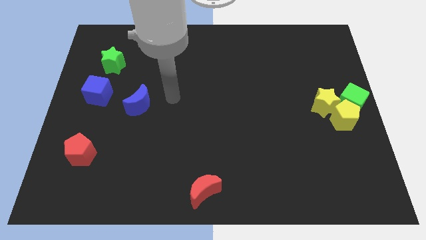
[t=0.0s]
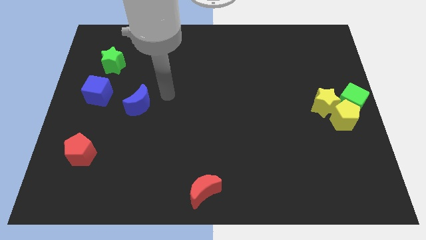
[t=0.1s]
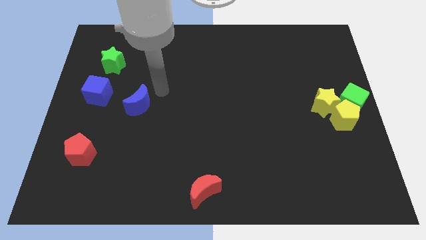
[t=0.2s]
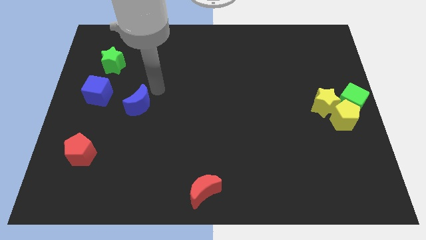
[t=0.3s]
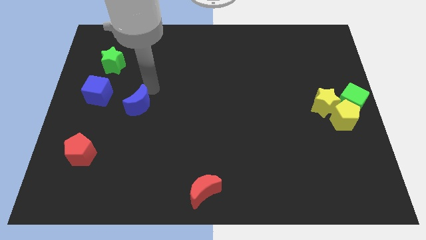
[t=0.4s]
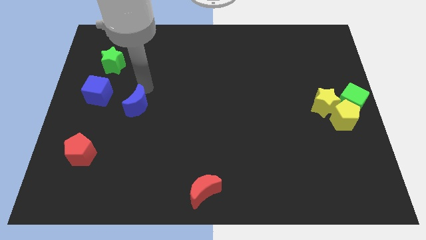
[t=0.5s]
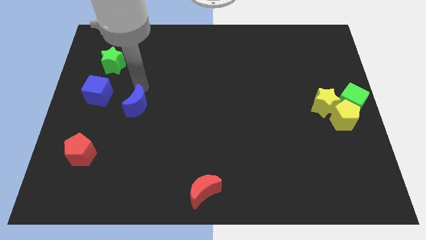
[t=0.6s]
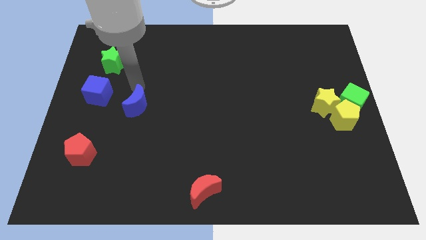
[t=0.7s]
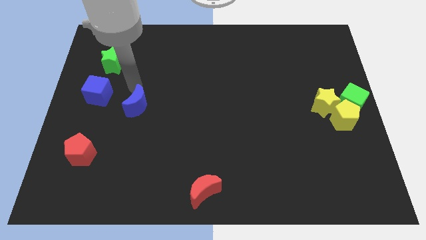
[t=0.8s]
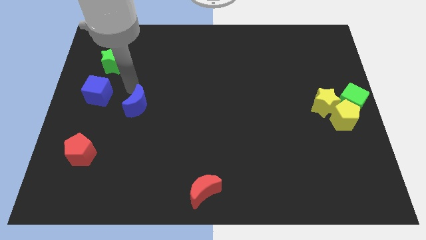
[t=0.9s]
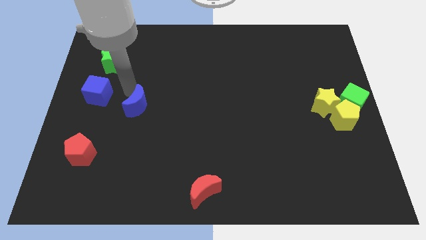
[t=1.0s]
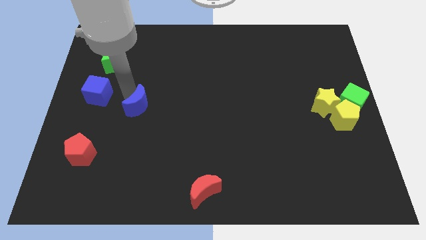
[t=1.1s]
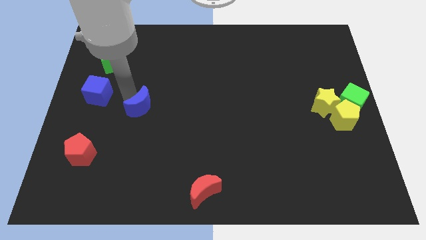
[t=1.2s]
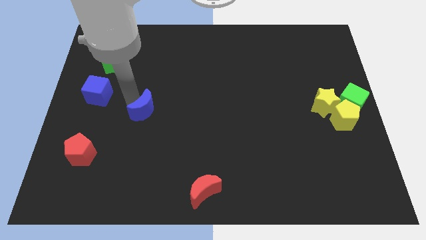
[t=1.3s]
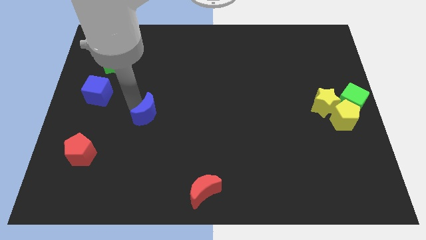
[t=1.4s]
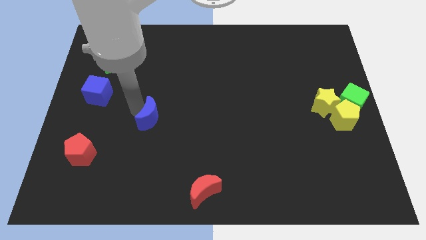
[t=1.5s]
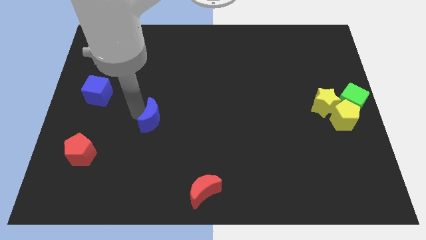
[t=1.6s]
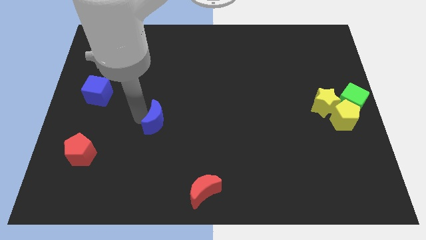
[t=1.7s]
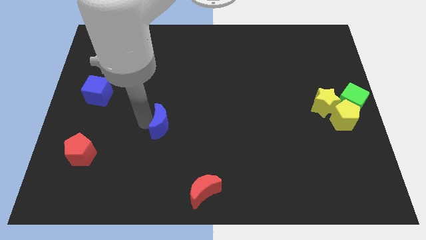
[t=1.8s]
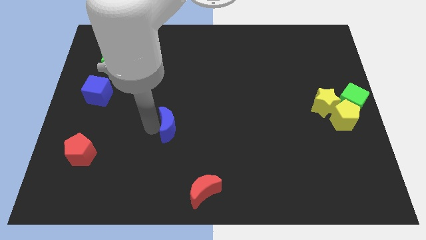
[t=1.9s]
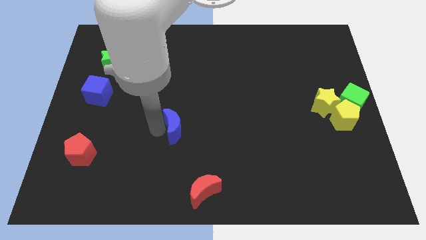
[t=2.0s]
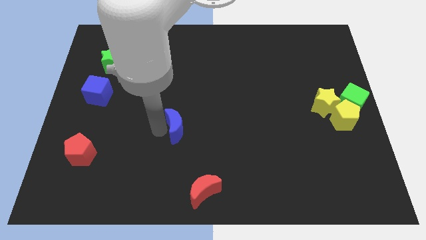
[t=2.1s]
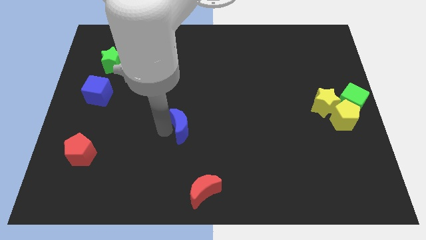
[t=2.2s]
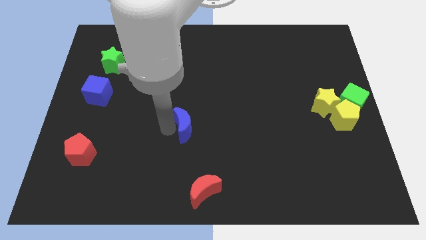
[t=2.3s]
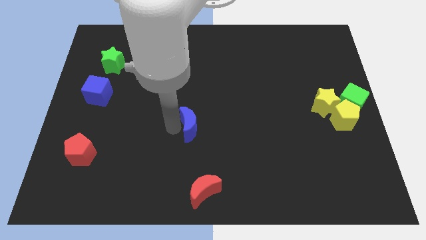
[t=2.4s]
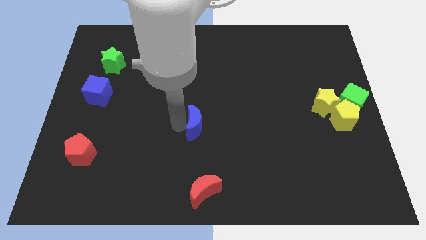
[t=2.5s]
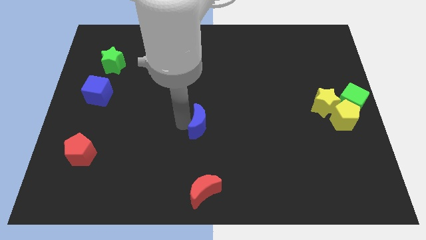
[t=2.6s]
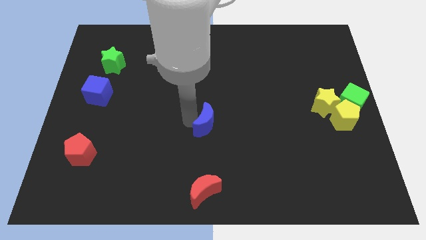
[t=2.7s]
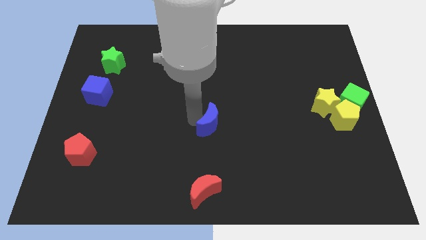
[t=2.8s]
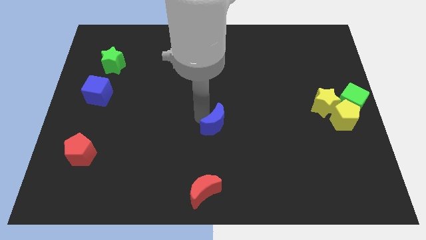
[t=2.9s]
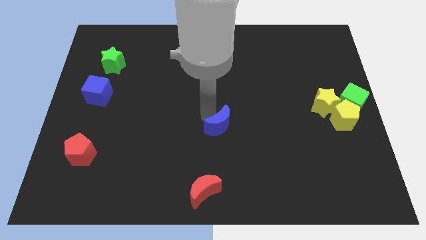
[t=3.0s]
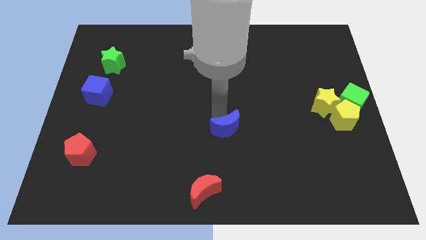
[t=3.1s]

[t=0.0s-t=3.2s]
place the blue moon above the red moon

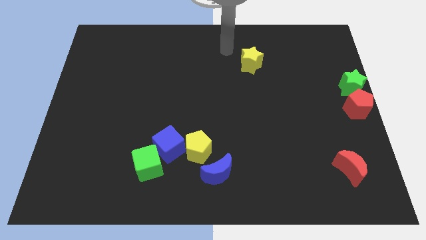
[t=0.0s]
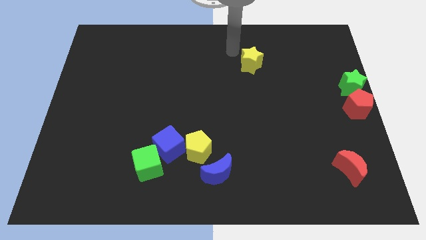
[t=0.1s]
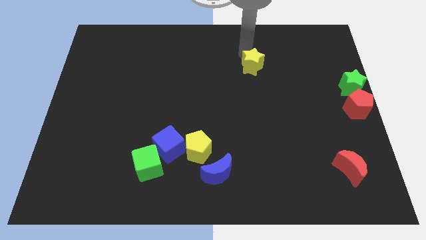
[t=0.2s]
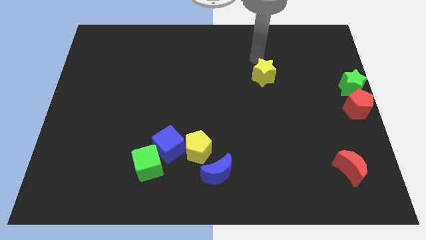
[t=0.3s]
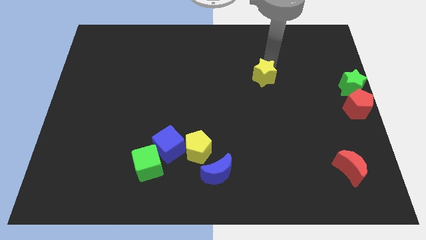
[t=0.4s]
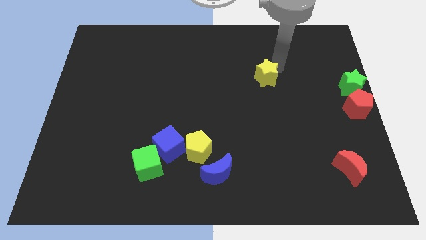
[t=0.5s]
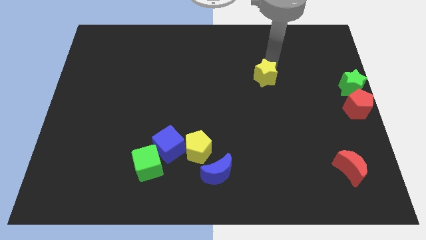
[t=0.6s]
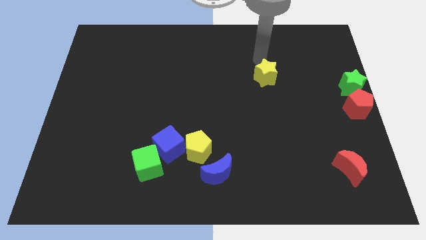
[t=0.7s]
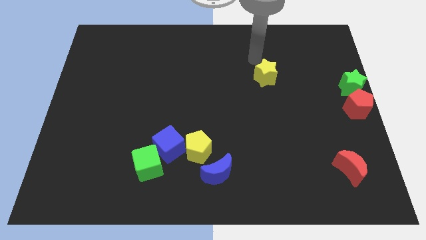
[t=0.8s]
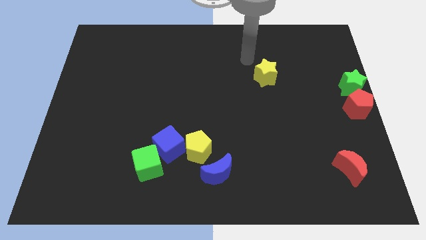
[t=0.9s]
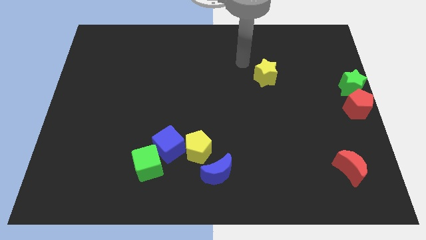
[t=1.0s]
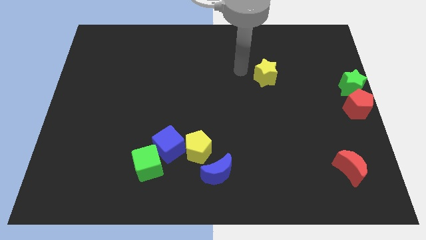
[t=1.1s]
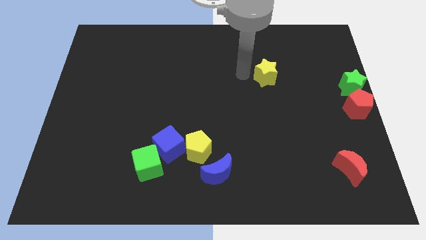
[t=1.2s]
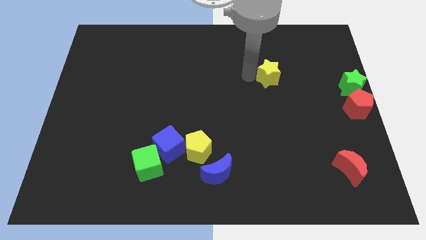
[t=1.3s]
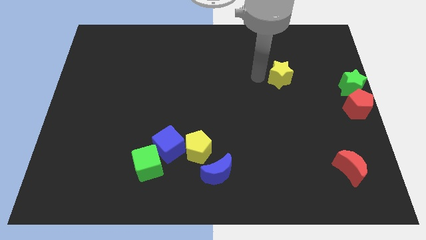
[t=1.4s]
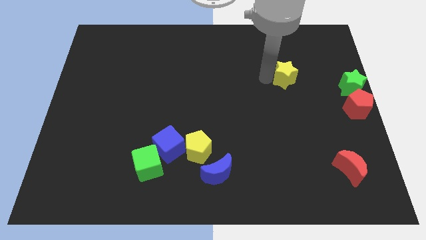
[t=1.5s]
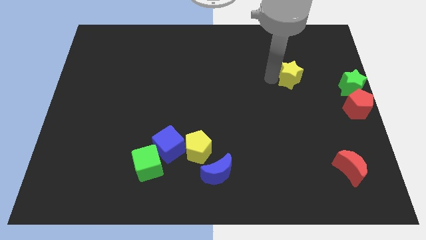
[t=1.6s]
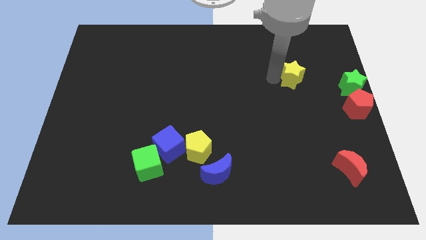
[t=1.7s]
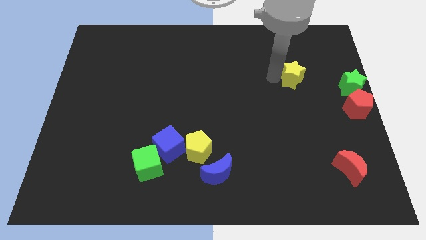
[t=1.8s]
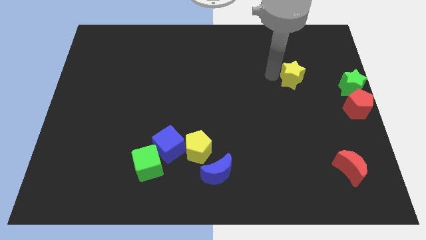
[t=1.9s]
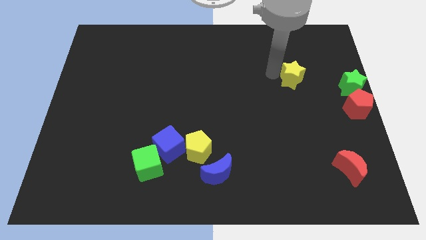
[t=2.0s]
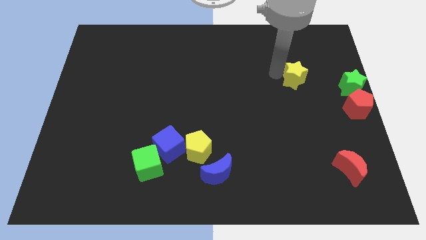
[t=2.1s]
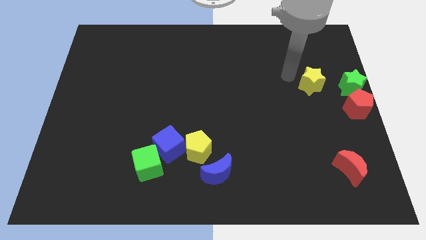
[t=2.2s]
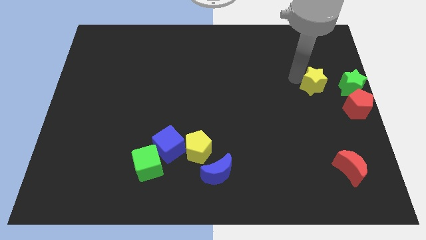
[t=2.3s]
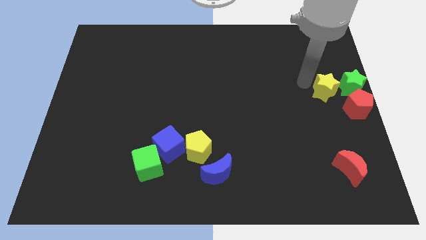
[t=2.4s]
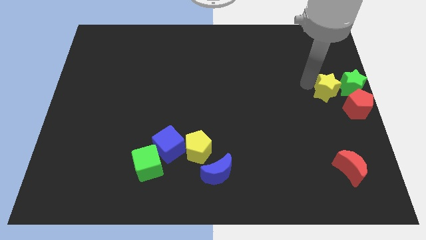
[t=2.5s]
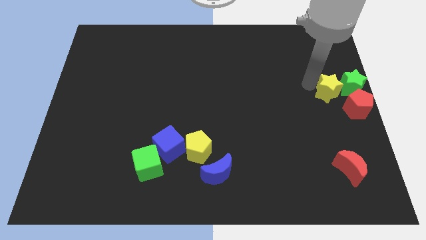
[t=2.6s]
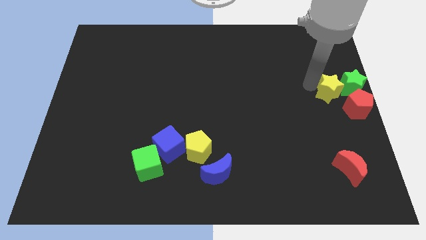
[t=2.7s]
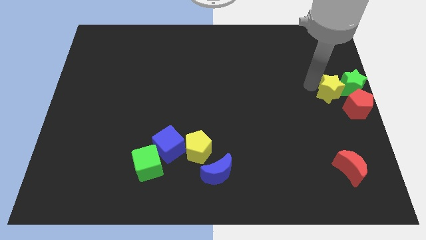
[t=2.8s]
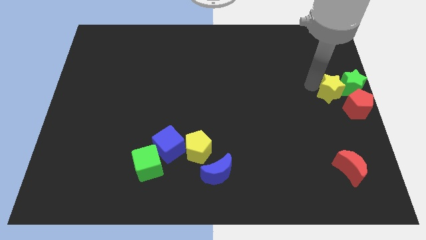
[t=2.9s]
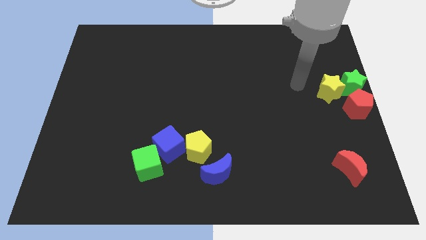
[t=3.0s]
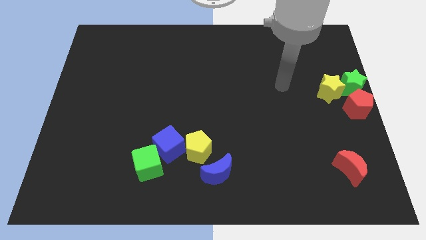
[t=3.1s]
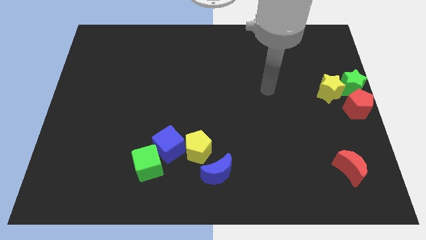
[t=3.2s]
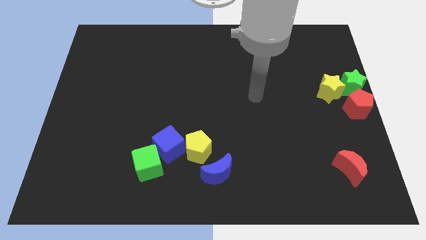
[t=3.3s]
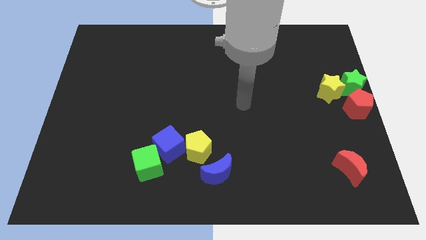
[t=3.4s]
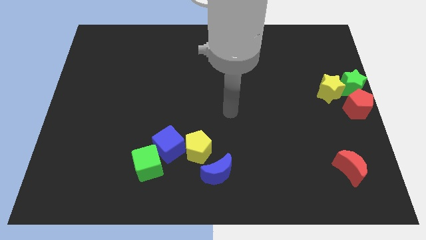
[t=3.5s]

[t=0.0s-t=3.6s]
move the yellow star towards the right center of the board

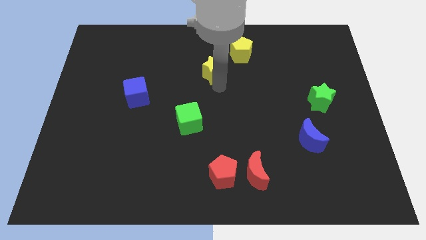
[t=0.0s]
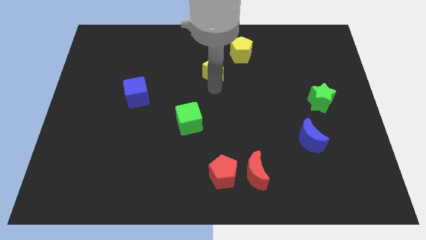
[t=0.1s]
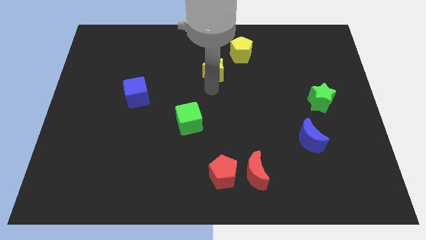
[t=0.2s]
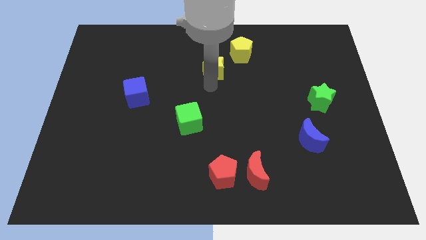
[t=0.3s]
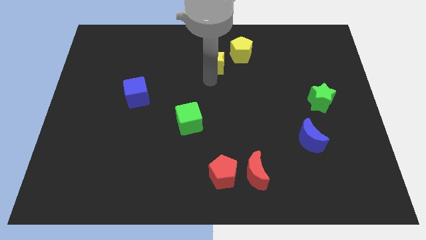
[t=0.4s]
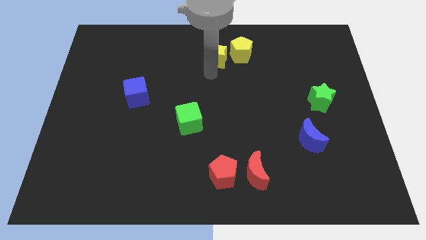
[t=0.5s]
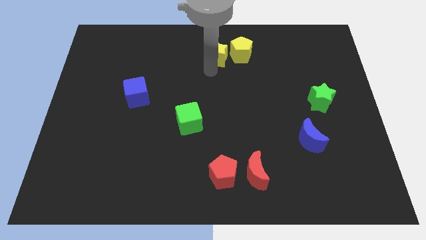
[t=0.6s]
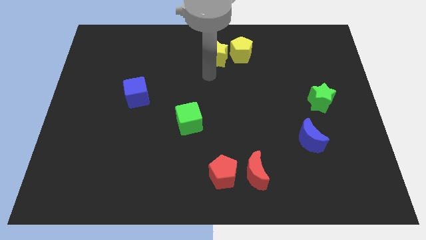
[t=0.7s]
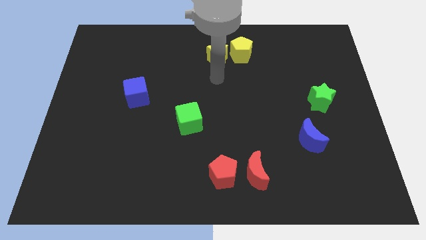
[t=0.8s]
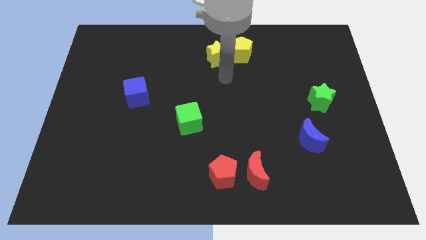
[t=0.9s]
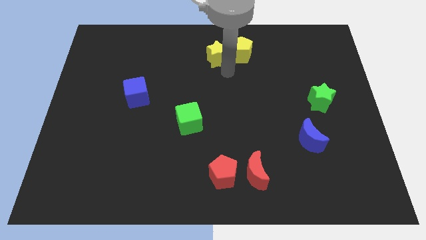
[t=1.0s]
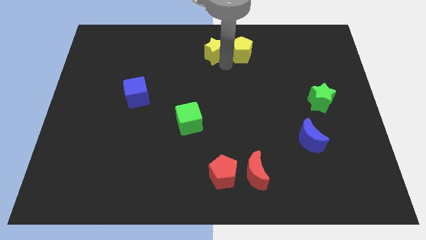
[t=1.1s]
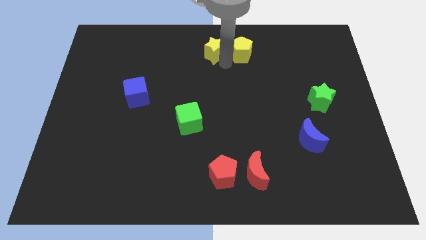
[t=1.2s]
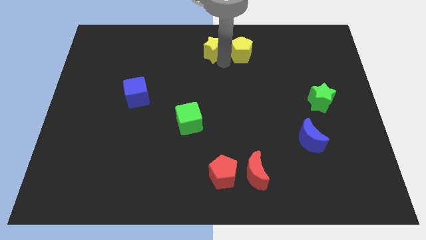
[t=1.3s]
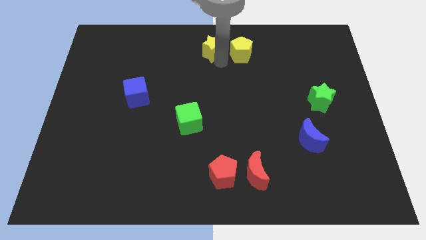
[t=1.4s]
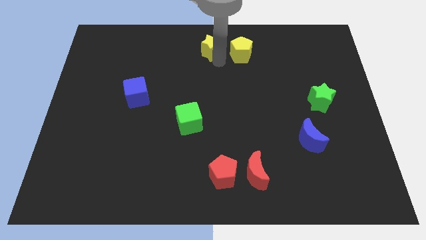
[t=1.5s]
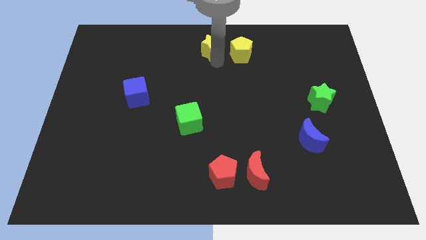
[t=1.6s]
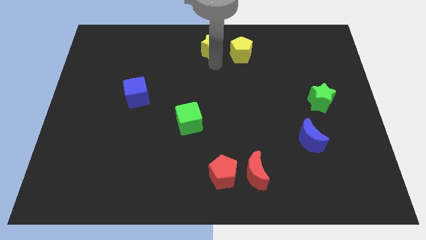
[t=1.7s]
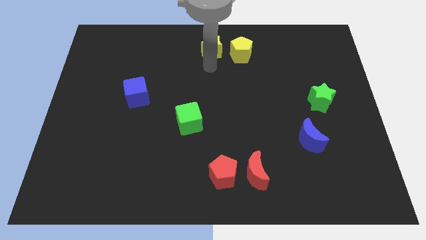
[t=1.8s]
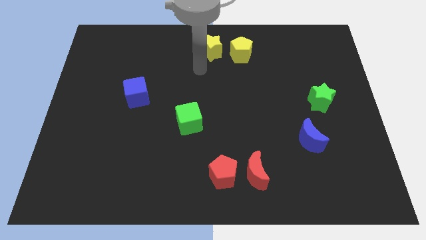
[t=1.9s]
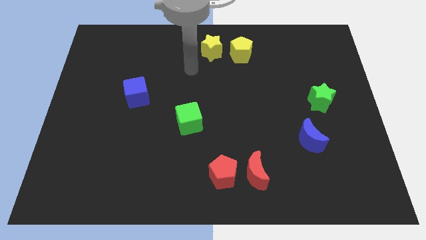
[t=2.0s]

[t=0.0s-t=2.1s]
slide yellow star to the left of yellow pentagon
